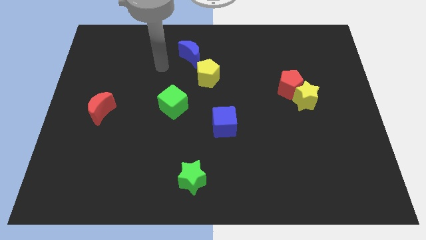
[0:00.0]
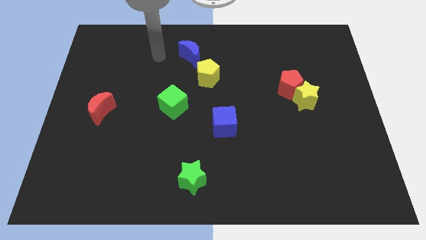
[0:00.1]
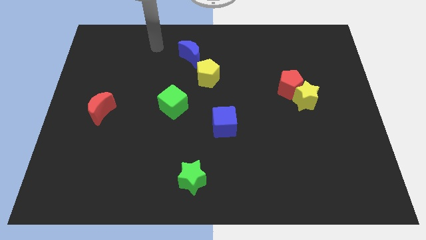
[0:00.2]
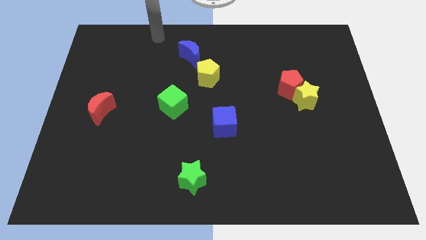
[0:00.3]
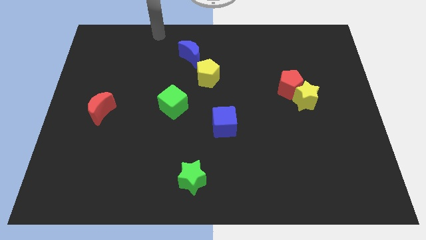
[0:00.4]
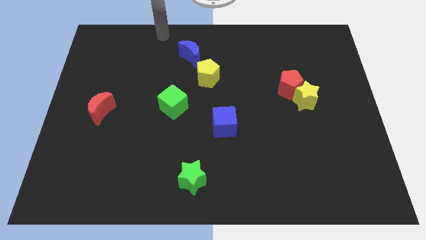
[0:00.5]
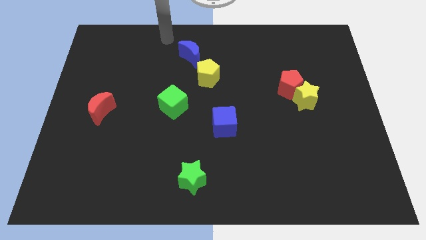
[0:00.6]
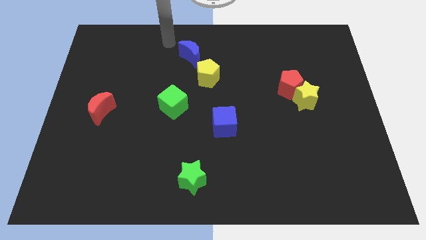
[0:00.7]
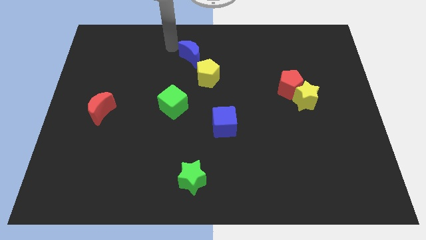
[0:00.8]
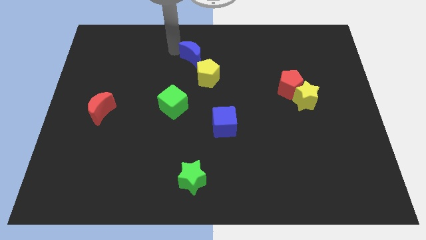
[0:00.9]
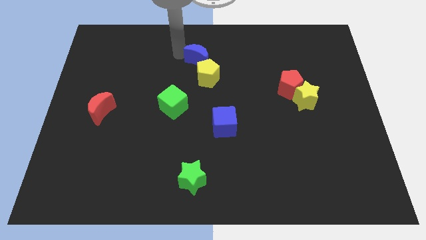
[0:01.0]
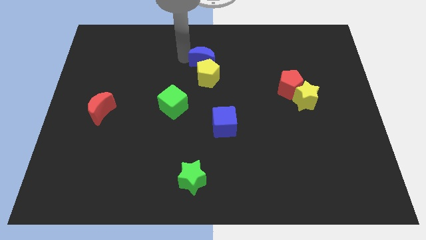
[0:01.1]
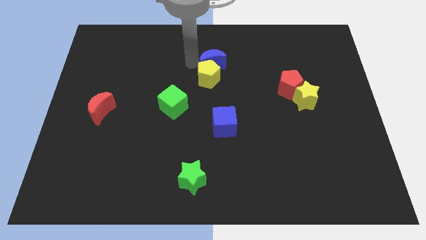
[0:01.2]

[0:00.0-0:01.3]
put the blue moon into the yellow pentagon

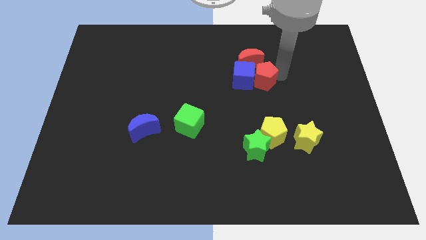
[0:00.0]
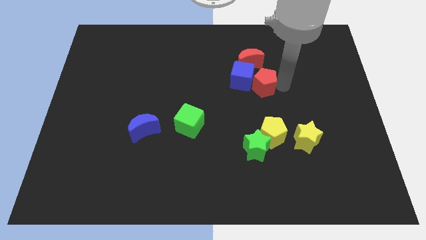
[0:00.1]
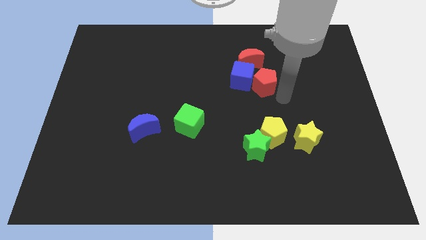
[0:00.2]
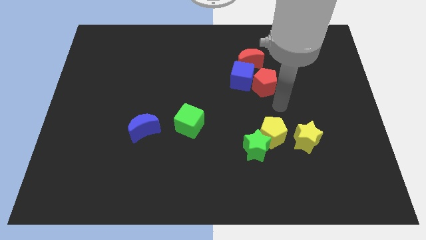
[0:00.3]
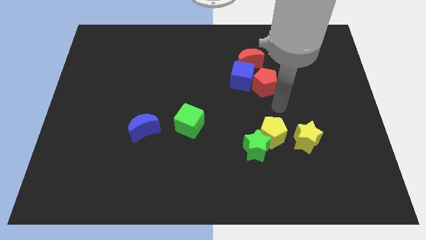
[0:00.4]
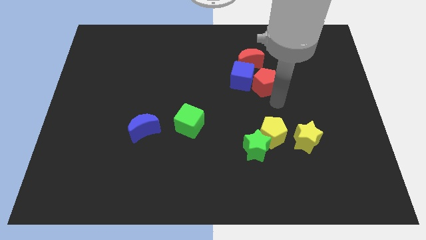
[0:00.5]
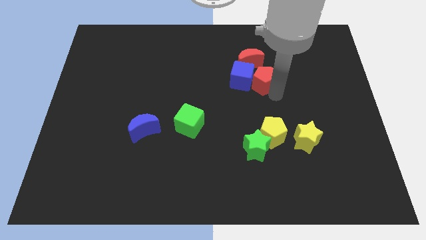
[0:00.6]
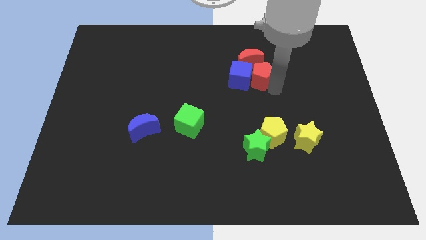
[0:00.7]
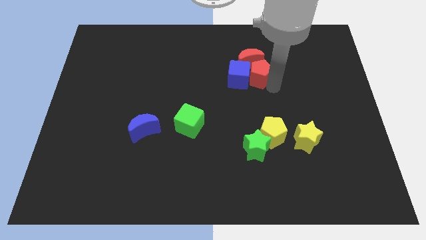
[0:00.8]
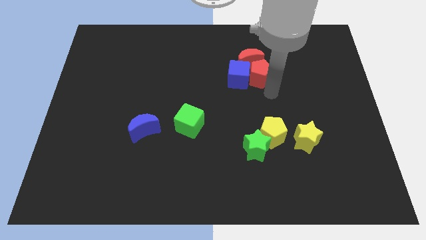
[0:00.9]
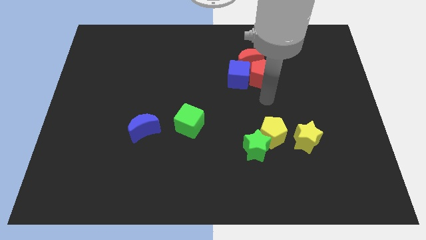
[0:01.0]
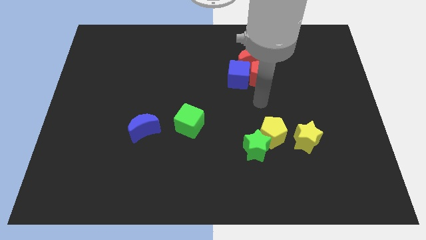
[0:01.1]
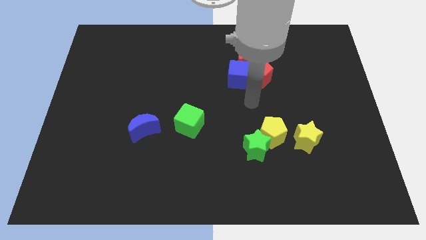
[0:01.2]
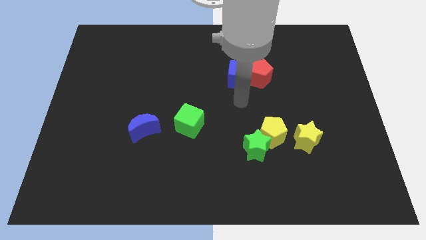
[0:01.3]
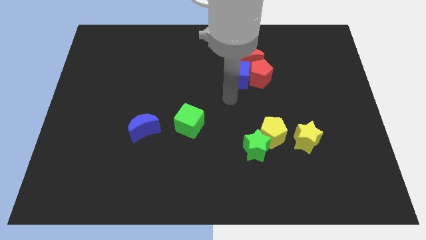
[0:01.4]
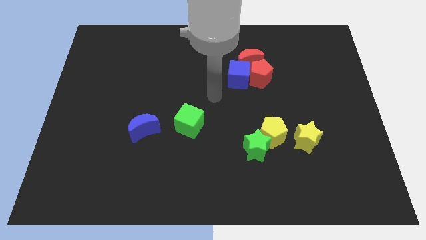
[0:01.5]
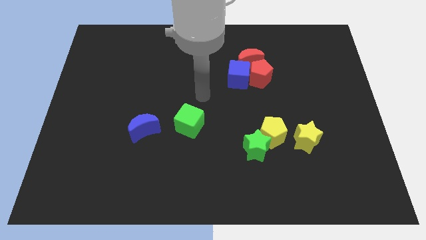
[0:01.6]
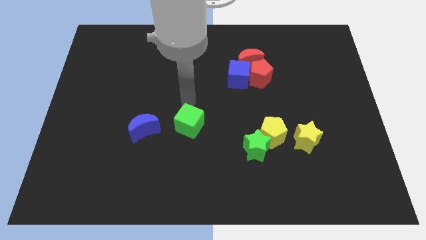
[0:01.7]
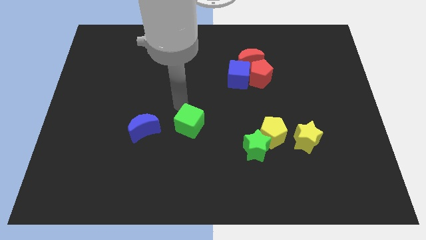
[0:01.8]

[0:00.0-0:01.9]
slightly adjust the red pentagon towards right

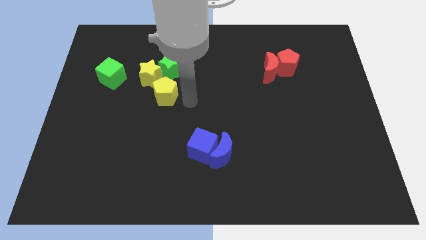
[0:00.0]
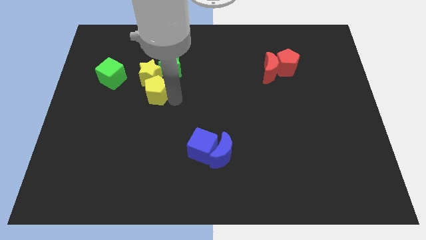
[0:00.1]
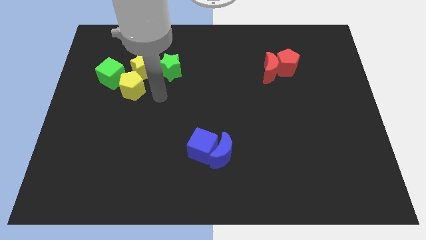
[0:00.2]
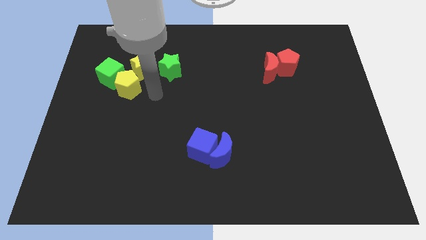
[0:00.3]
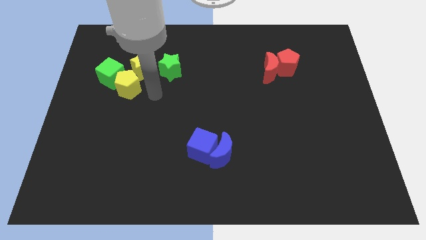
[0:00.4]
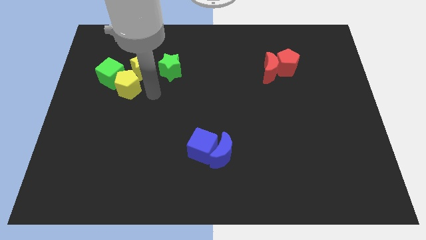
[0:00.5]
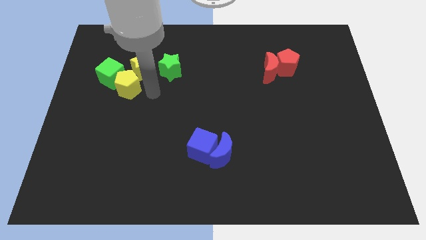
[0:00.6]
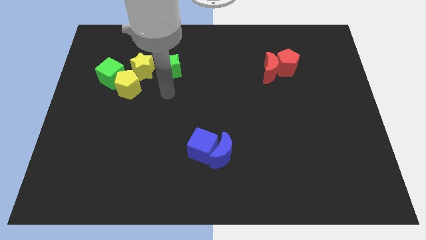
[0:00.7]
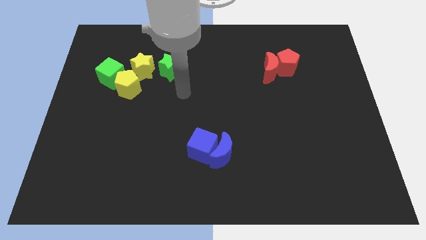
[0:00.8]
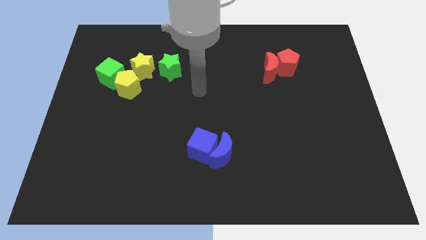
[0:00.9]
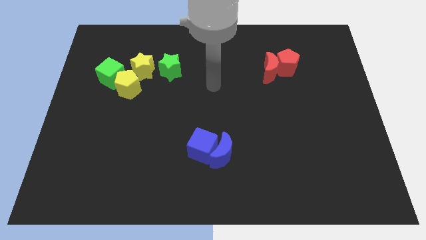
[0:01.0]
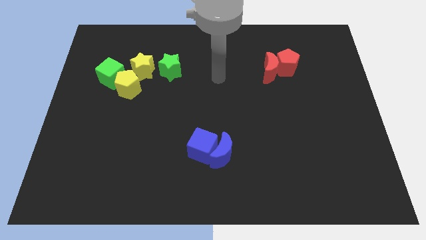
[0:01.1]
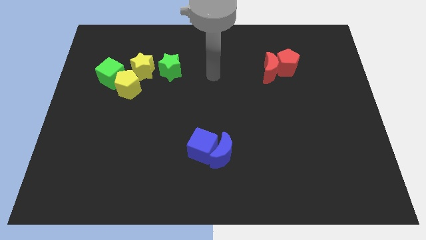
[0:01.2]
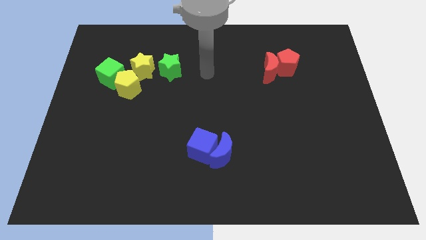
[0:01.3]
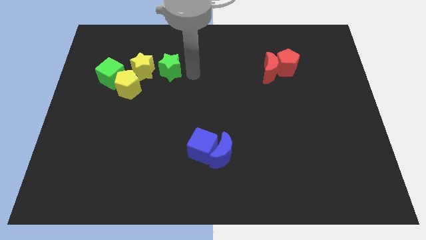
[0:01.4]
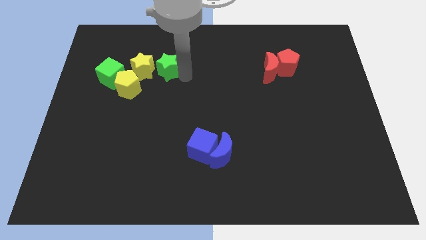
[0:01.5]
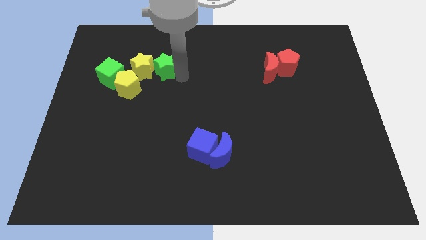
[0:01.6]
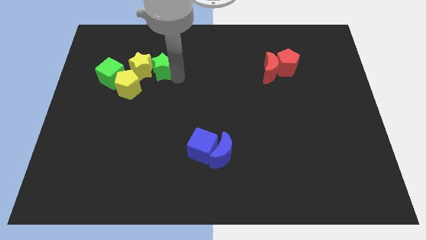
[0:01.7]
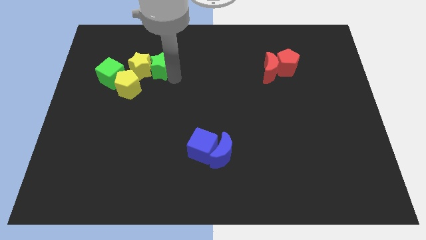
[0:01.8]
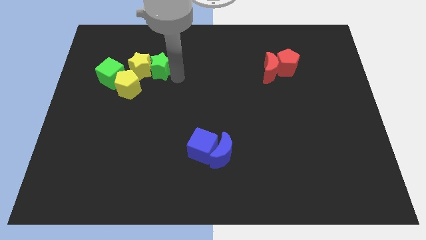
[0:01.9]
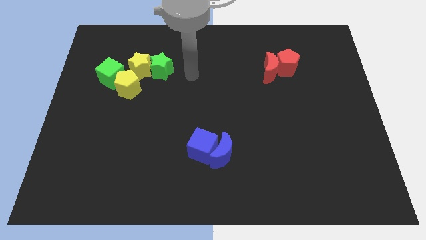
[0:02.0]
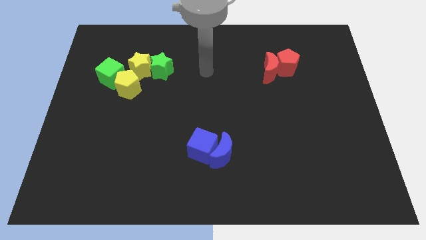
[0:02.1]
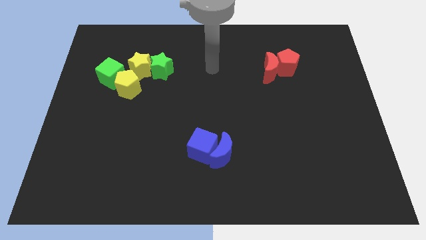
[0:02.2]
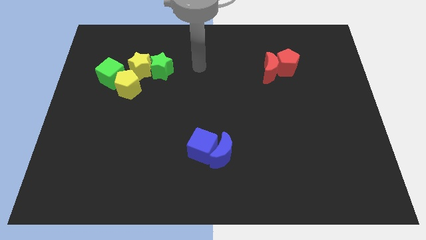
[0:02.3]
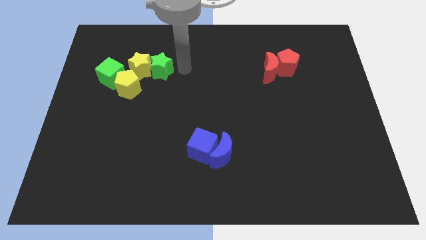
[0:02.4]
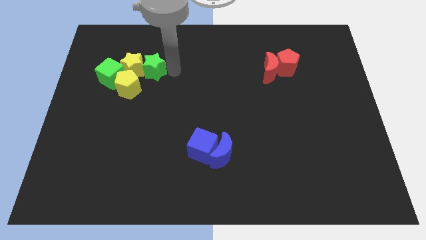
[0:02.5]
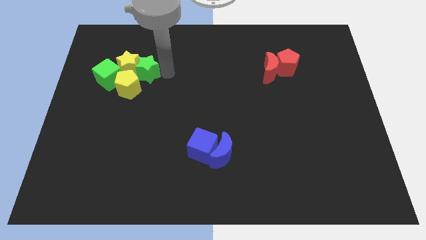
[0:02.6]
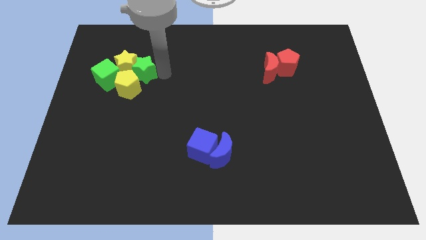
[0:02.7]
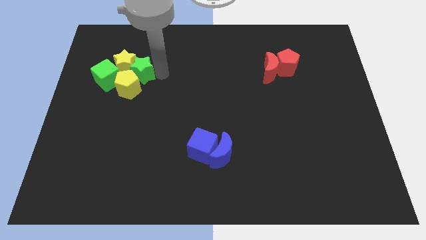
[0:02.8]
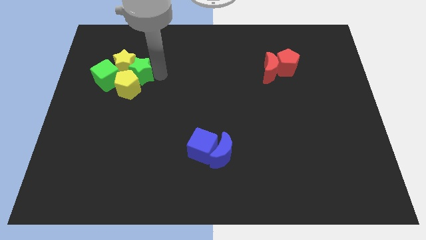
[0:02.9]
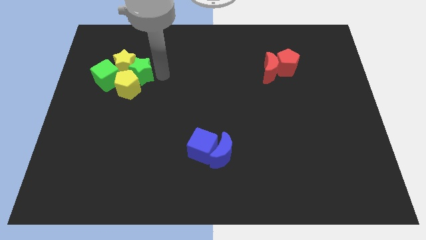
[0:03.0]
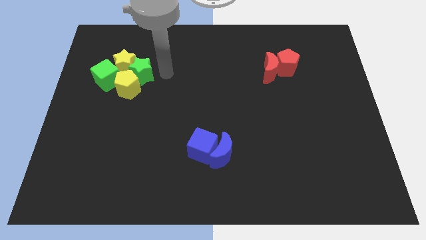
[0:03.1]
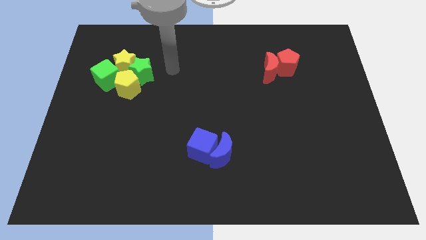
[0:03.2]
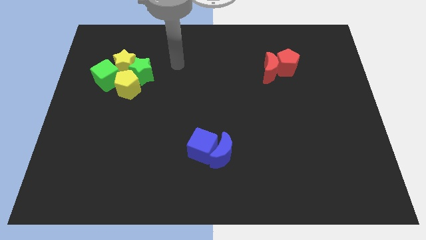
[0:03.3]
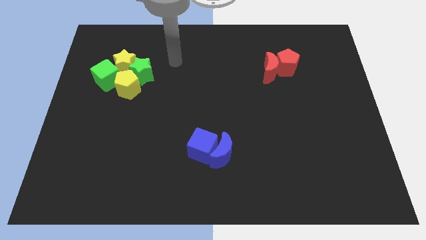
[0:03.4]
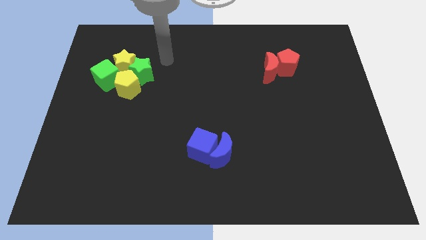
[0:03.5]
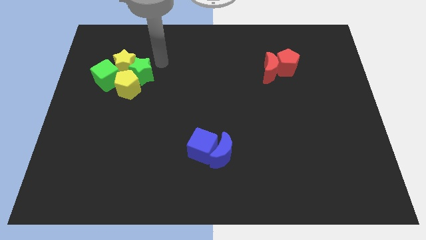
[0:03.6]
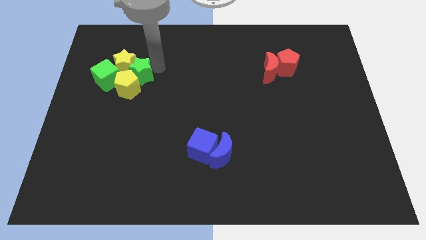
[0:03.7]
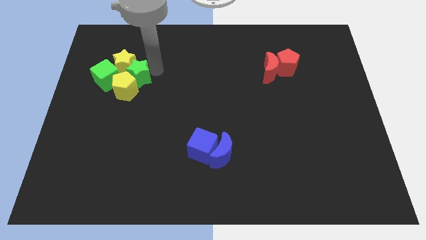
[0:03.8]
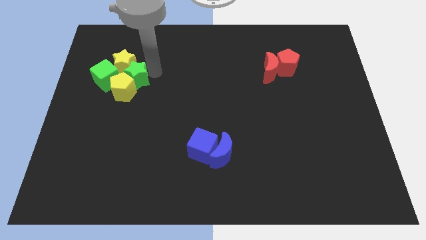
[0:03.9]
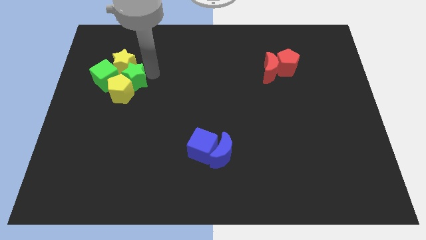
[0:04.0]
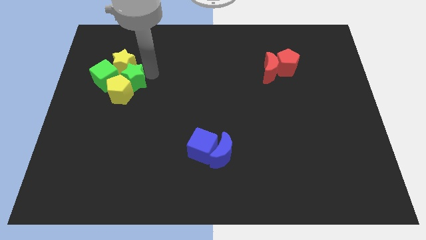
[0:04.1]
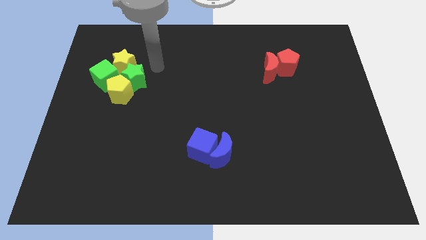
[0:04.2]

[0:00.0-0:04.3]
group up the green and yellow blocks together at the left side of the board

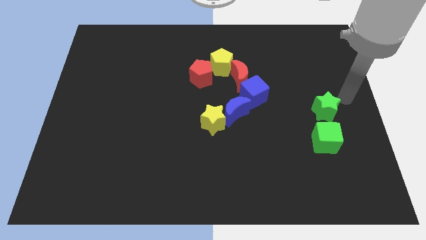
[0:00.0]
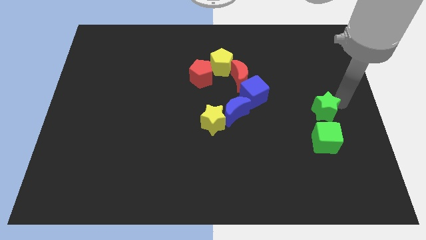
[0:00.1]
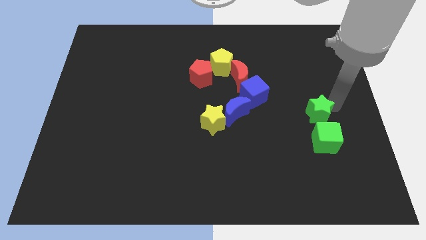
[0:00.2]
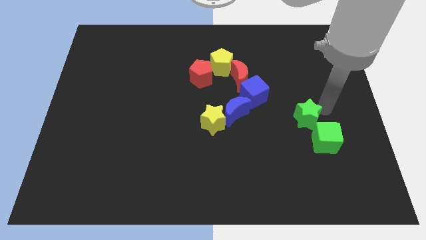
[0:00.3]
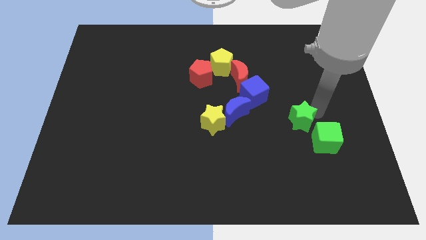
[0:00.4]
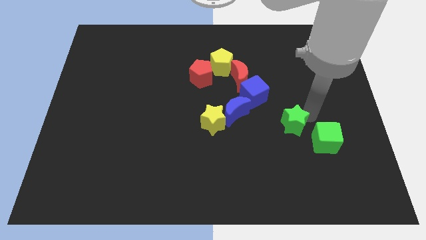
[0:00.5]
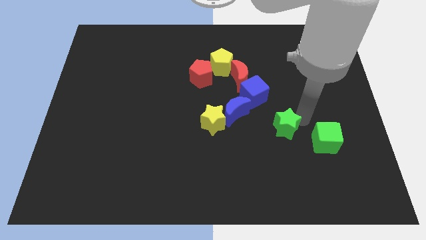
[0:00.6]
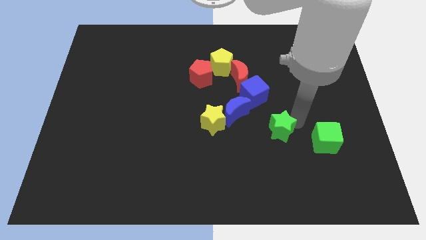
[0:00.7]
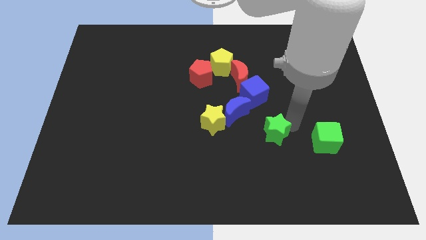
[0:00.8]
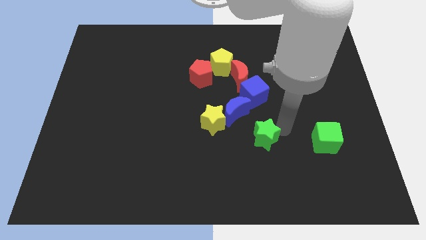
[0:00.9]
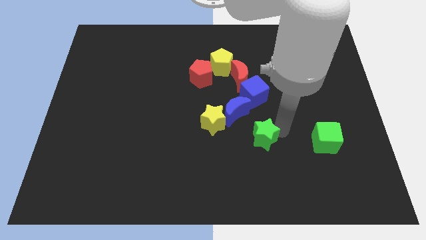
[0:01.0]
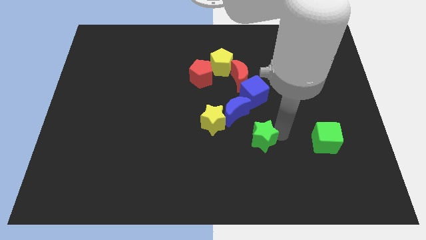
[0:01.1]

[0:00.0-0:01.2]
put the green star to the left side of green cube

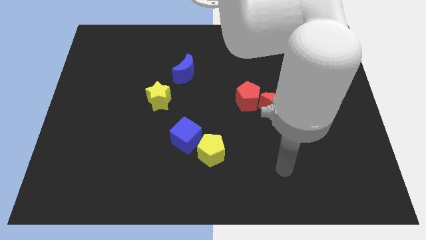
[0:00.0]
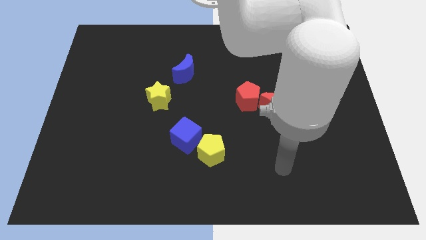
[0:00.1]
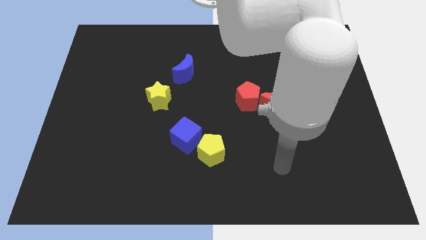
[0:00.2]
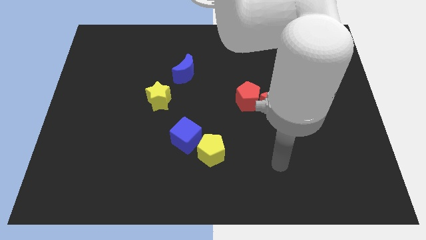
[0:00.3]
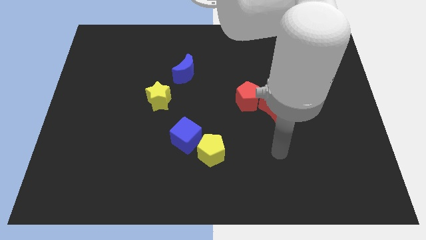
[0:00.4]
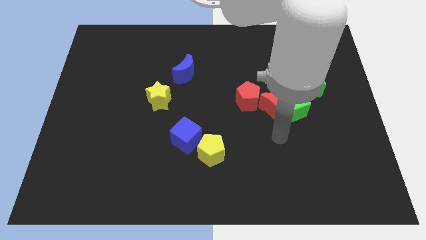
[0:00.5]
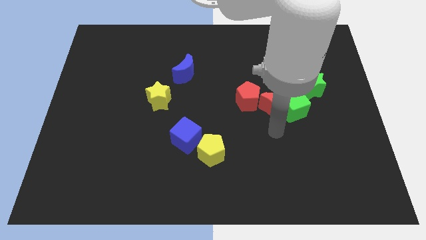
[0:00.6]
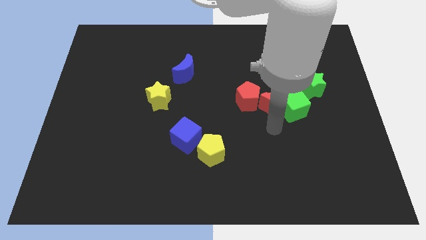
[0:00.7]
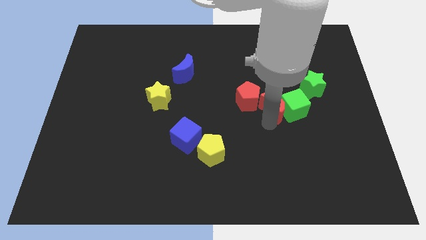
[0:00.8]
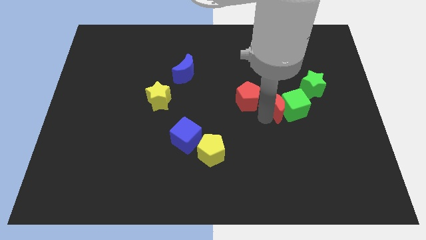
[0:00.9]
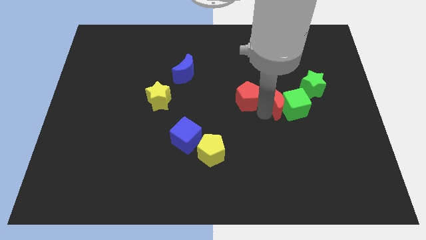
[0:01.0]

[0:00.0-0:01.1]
touch left of red crescent
